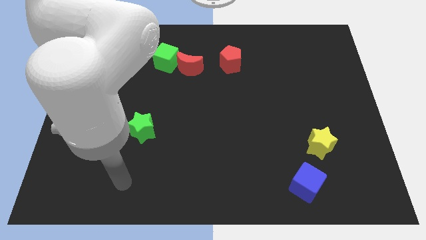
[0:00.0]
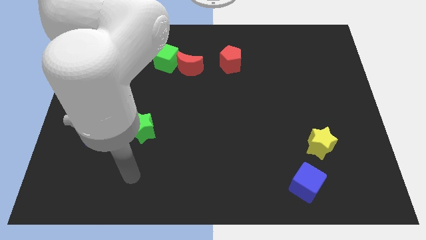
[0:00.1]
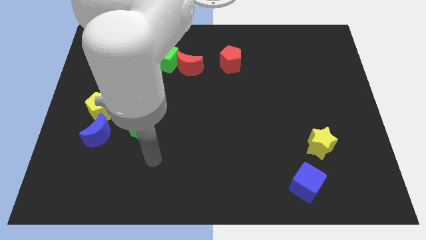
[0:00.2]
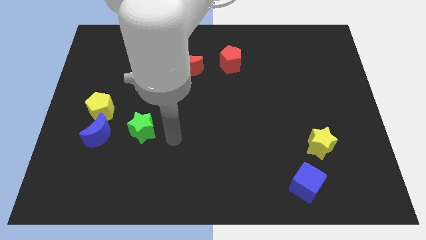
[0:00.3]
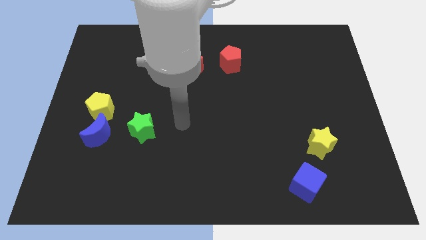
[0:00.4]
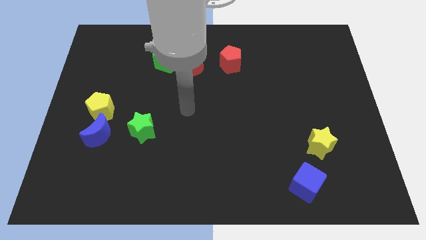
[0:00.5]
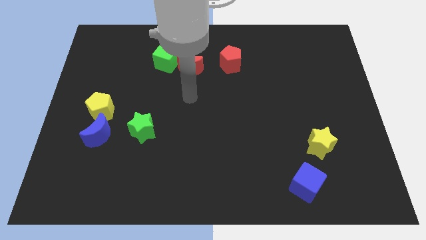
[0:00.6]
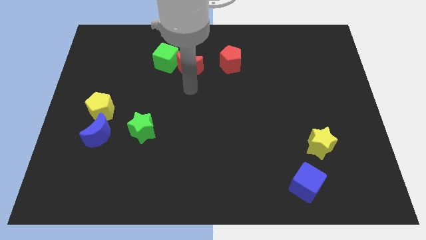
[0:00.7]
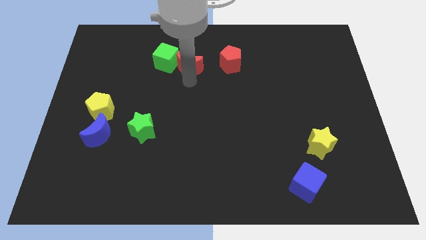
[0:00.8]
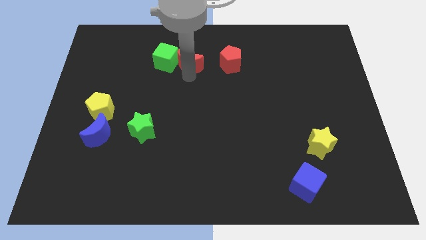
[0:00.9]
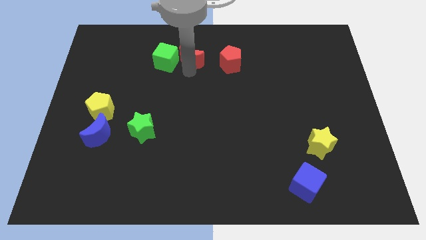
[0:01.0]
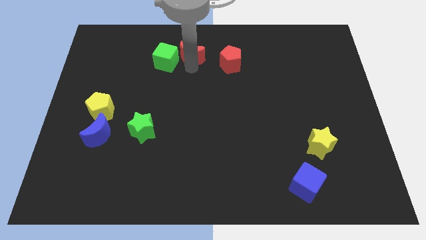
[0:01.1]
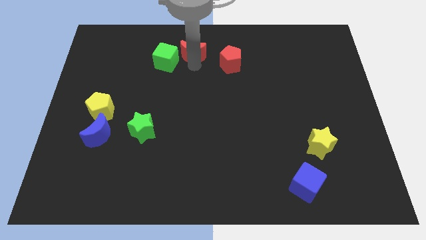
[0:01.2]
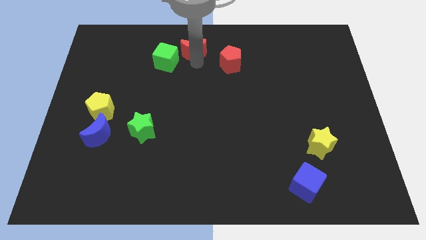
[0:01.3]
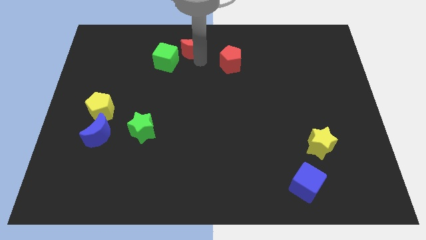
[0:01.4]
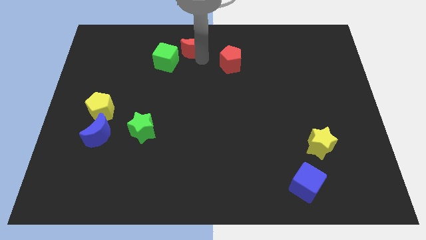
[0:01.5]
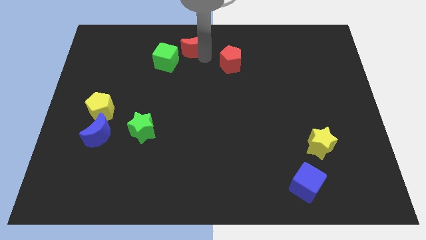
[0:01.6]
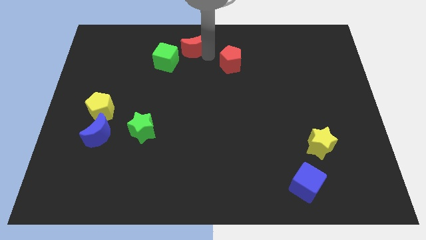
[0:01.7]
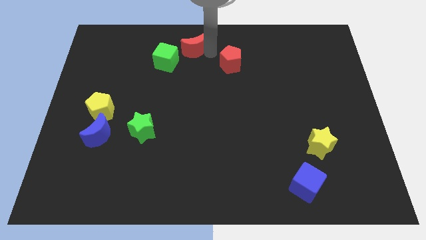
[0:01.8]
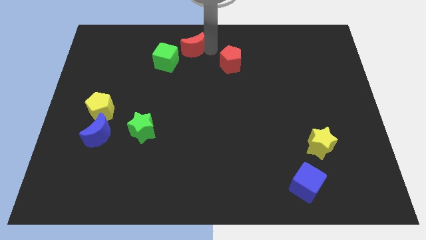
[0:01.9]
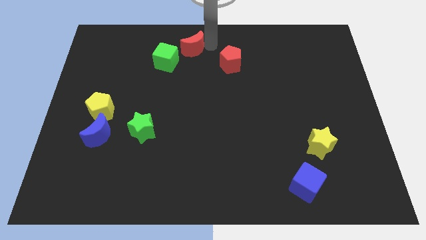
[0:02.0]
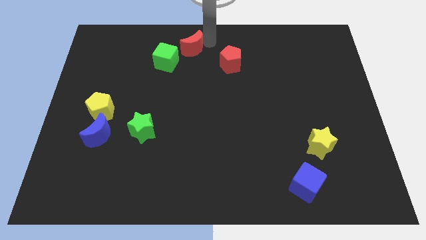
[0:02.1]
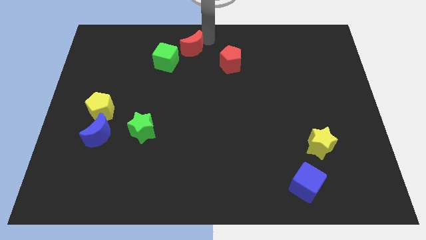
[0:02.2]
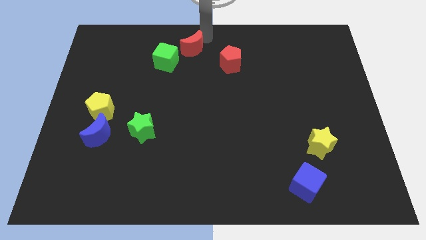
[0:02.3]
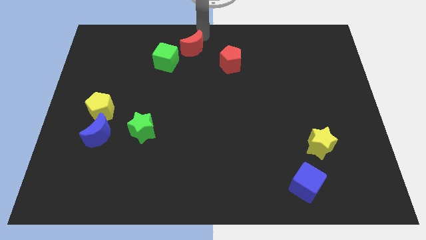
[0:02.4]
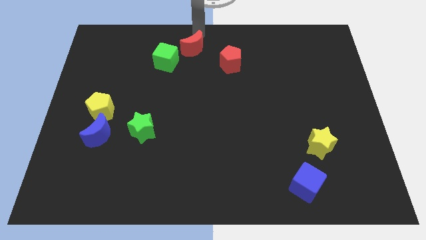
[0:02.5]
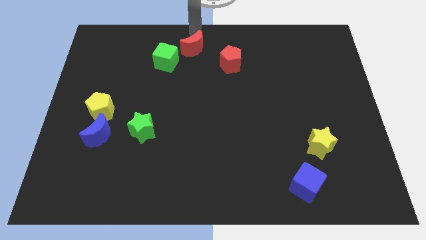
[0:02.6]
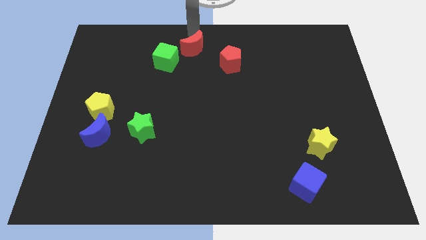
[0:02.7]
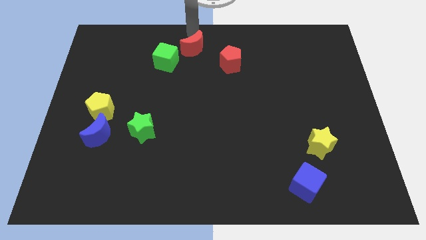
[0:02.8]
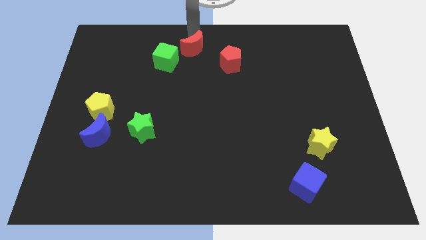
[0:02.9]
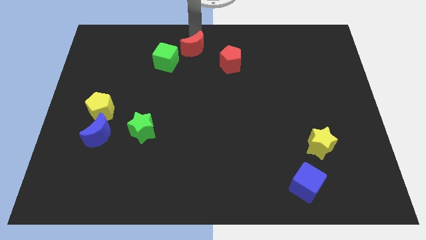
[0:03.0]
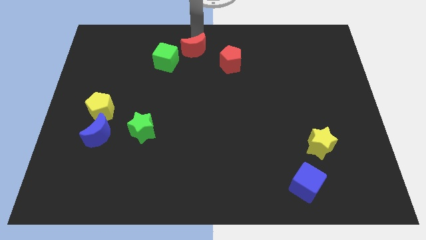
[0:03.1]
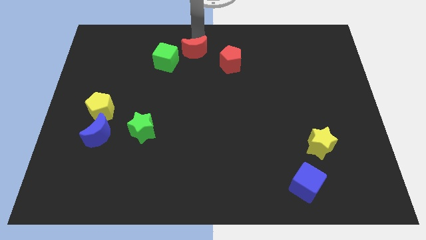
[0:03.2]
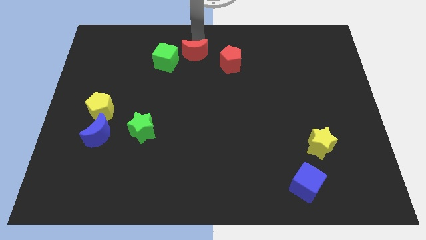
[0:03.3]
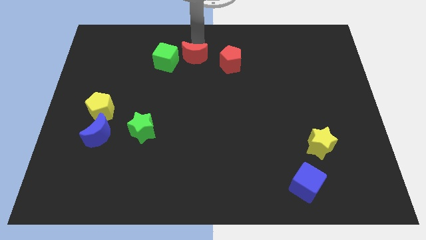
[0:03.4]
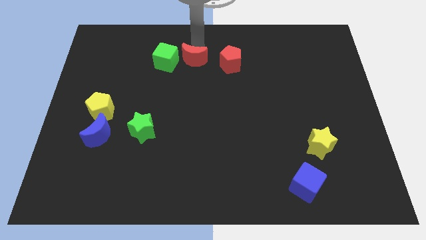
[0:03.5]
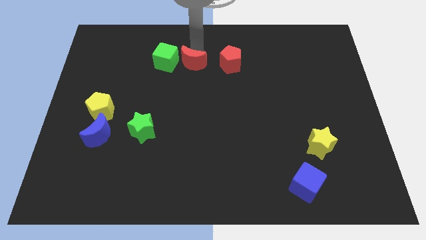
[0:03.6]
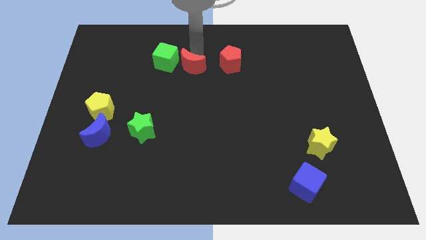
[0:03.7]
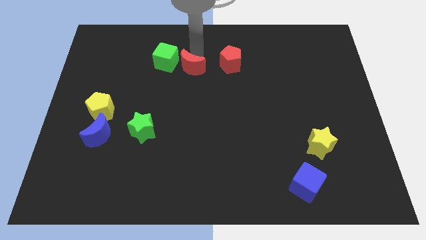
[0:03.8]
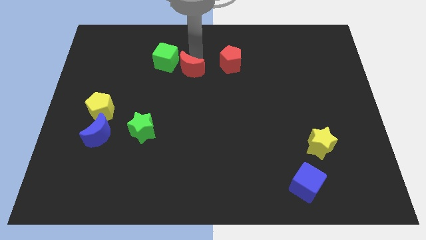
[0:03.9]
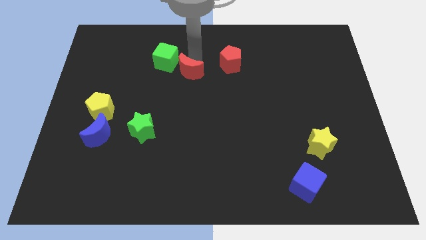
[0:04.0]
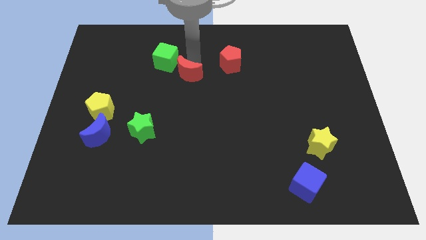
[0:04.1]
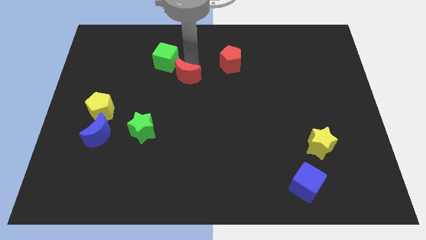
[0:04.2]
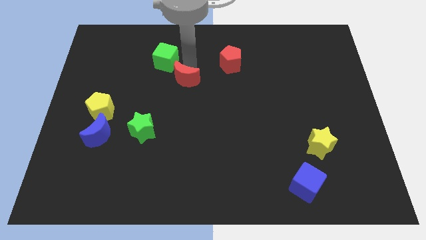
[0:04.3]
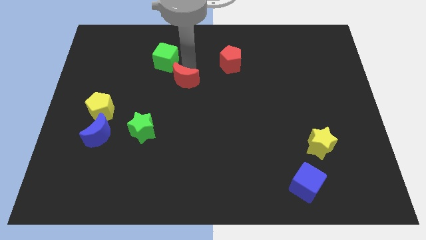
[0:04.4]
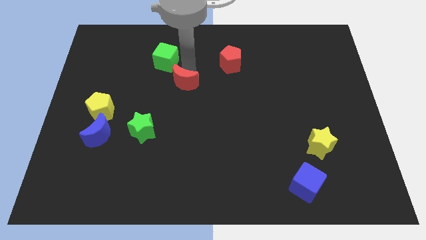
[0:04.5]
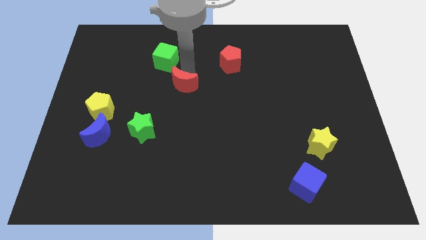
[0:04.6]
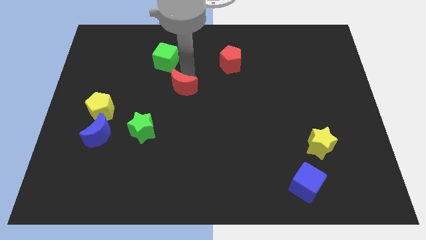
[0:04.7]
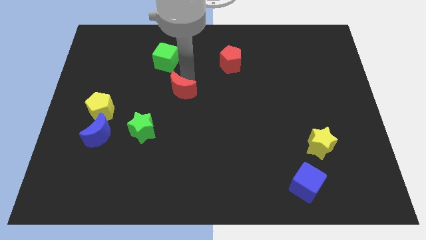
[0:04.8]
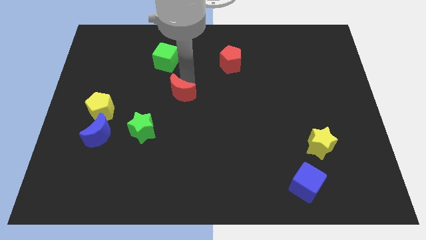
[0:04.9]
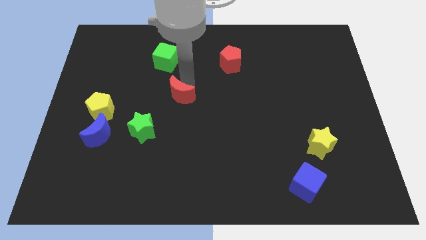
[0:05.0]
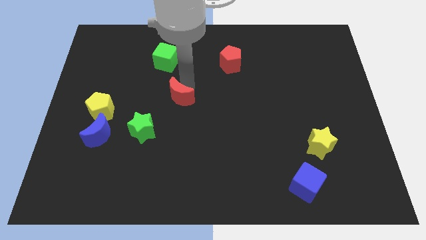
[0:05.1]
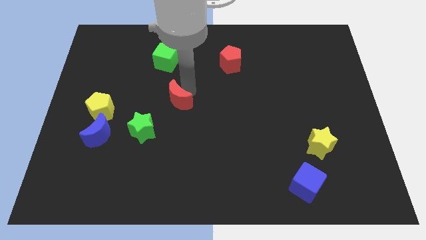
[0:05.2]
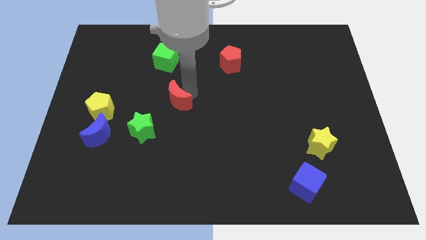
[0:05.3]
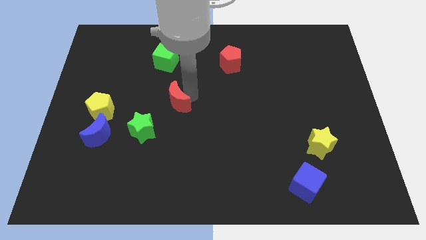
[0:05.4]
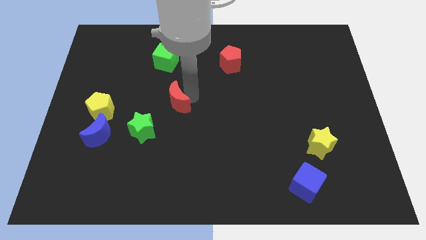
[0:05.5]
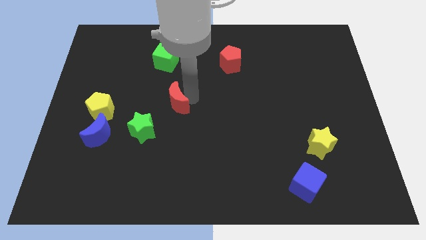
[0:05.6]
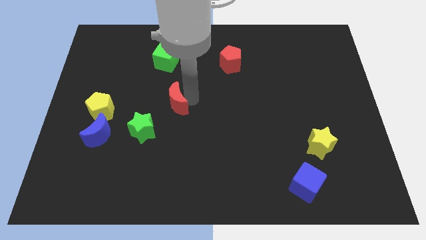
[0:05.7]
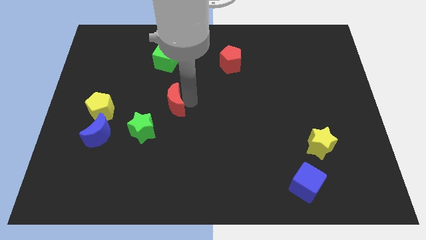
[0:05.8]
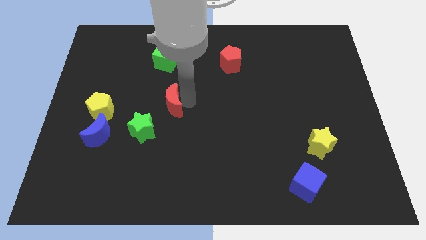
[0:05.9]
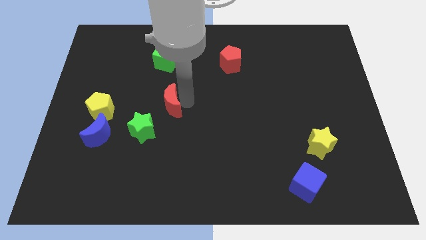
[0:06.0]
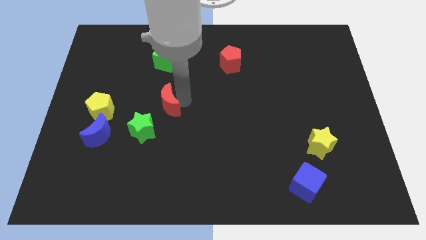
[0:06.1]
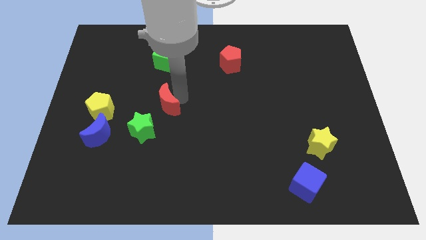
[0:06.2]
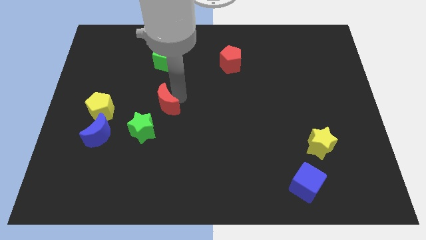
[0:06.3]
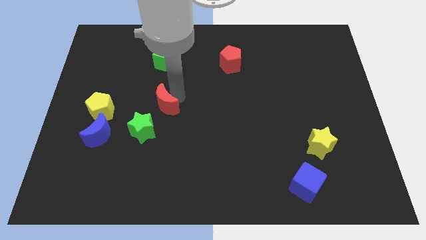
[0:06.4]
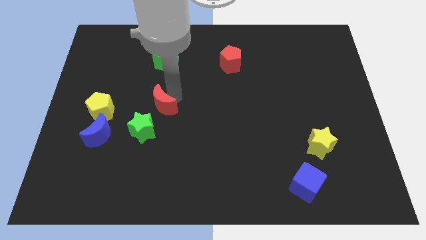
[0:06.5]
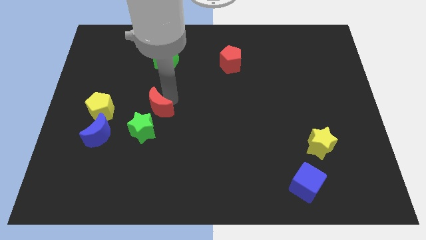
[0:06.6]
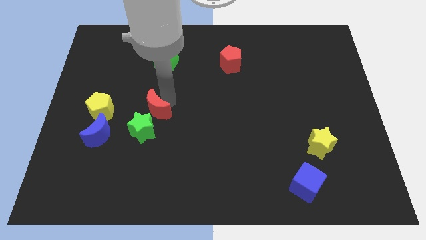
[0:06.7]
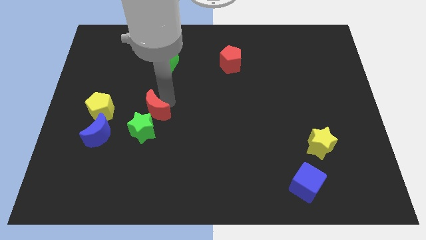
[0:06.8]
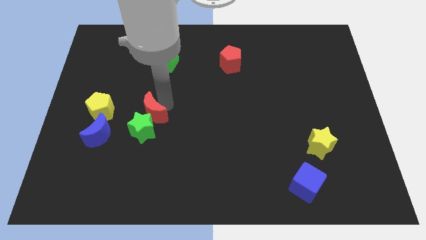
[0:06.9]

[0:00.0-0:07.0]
push the red moon towards the green star

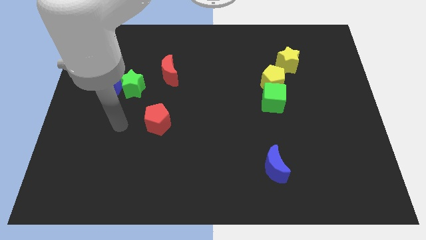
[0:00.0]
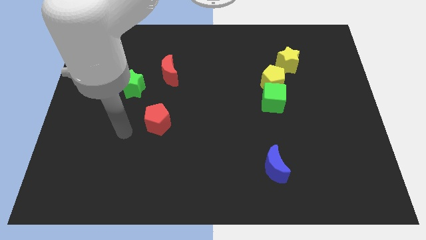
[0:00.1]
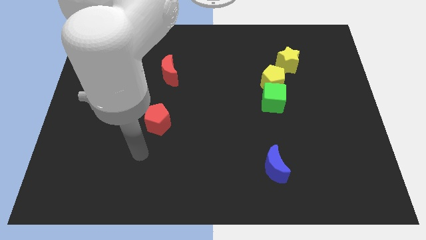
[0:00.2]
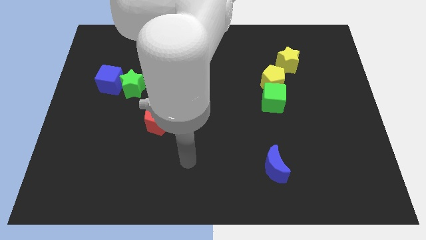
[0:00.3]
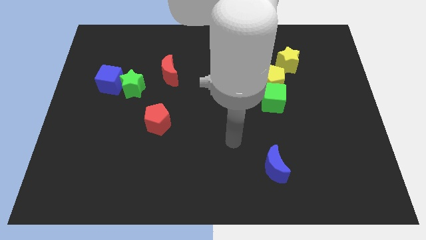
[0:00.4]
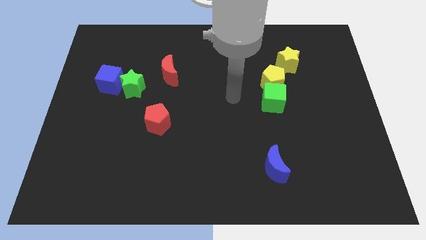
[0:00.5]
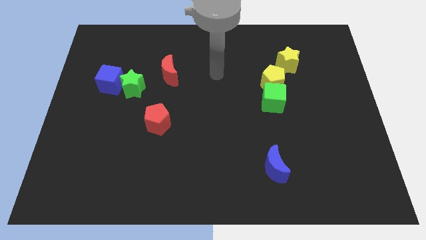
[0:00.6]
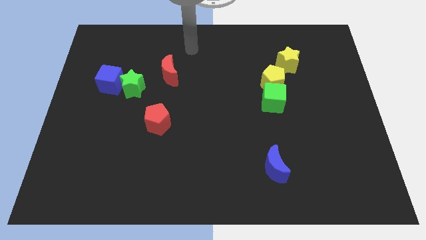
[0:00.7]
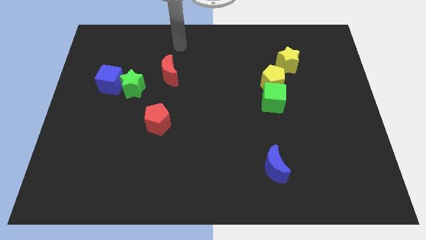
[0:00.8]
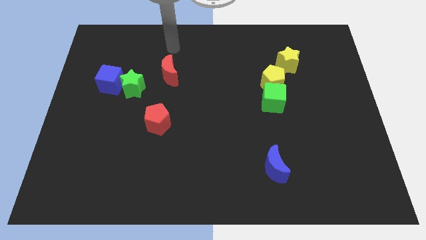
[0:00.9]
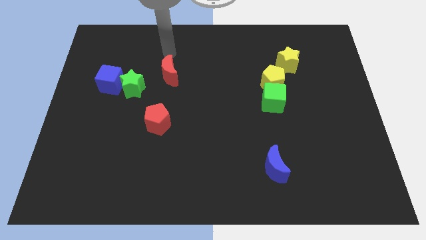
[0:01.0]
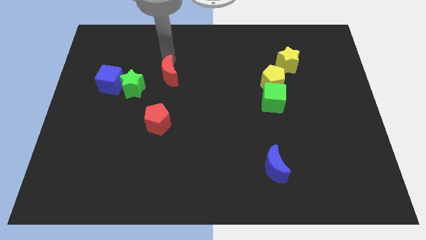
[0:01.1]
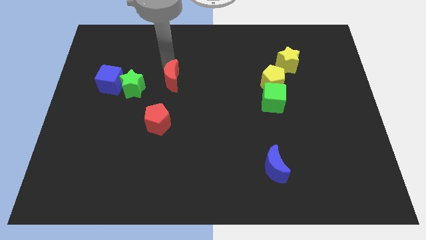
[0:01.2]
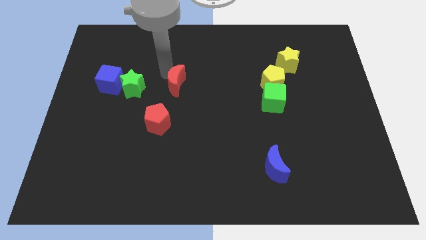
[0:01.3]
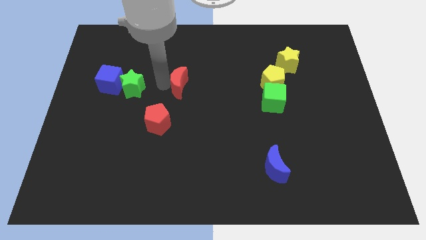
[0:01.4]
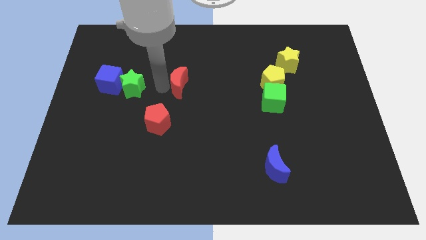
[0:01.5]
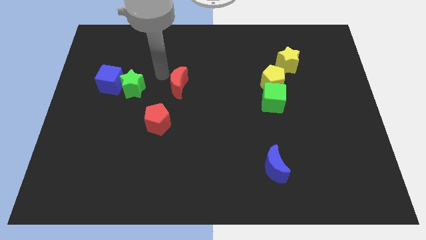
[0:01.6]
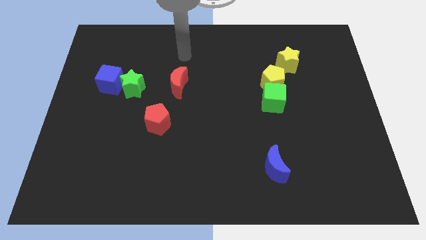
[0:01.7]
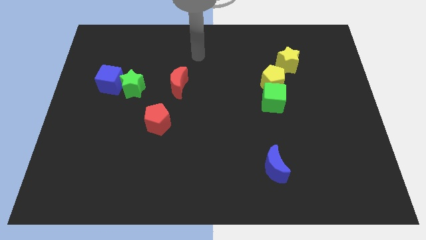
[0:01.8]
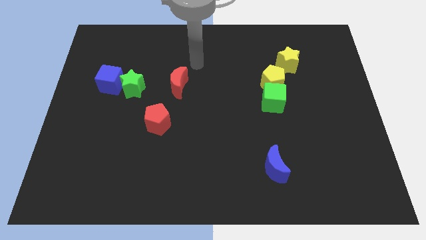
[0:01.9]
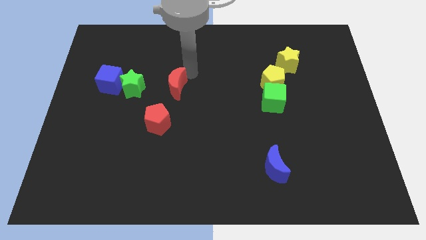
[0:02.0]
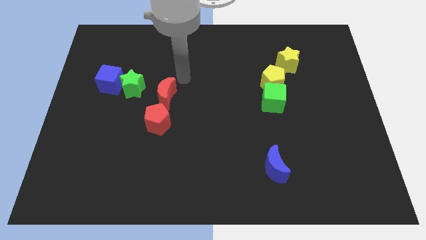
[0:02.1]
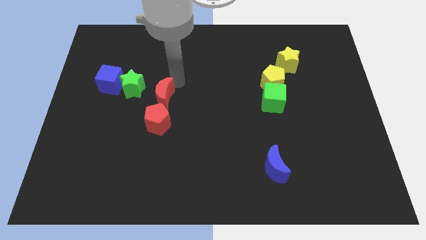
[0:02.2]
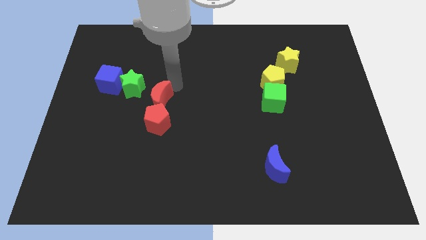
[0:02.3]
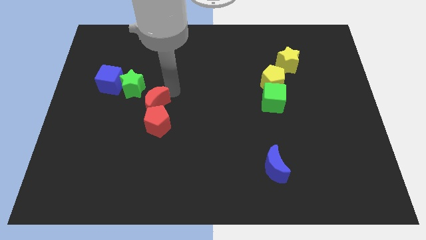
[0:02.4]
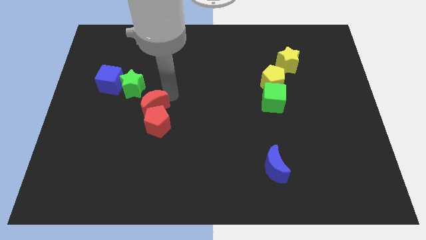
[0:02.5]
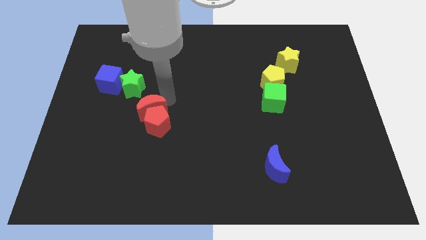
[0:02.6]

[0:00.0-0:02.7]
push the red moon towards the red pentagon
